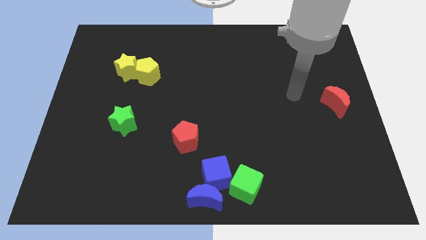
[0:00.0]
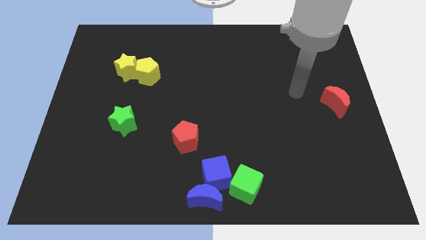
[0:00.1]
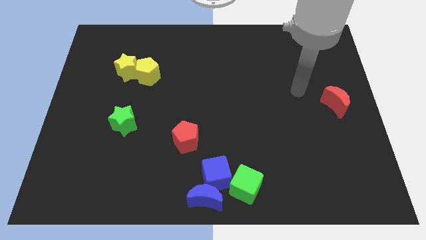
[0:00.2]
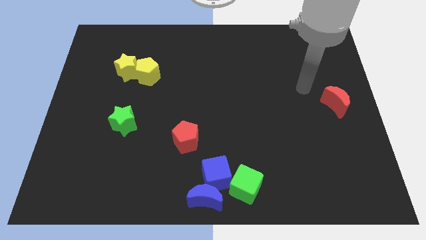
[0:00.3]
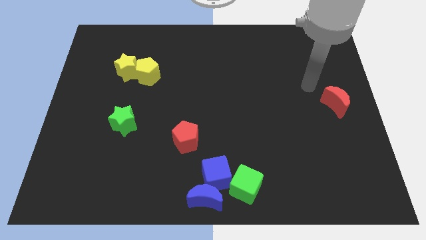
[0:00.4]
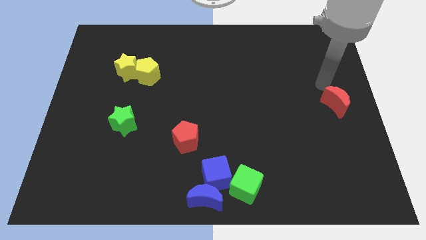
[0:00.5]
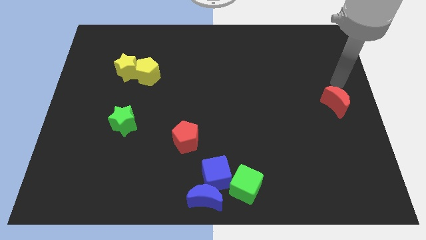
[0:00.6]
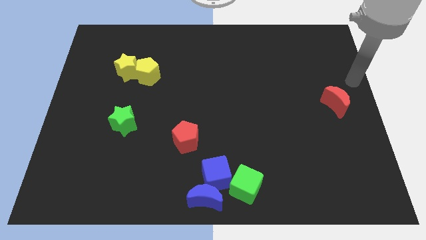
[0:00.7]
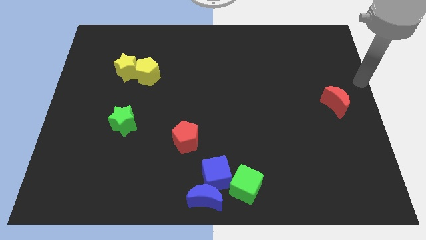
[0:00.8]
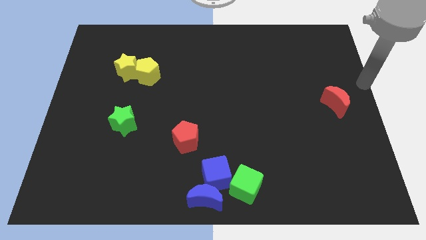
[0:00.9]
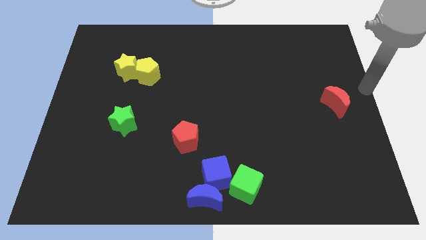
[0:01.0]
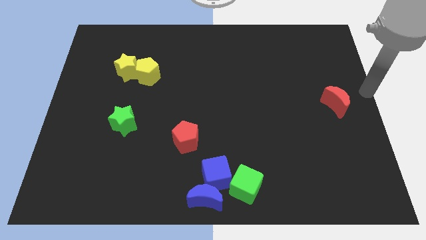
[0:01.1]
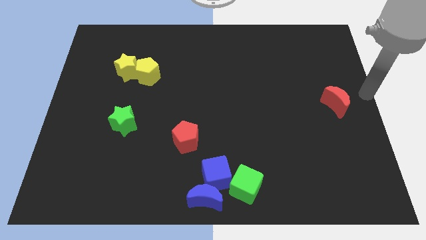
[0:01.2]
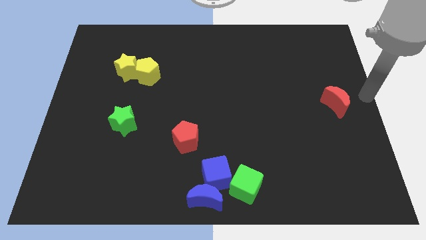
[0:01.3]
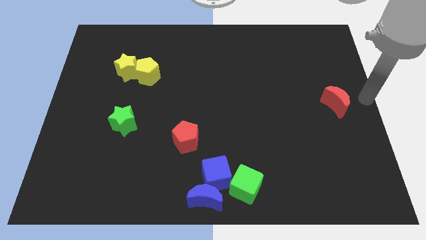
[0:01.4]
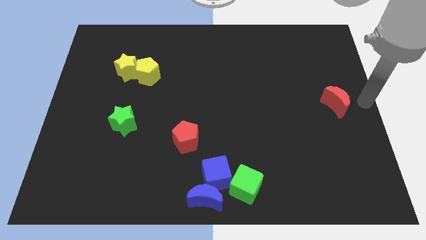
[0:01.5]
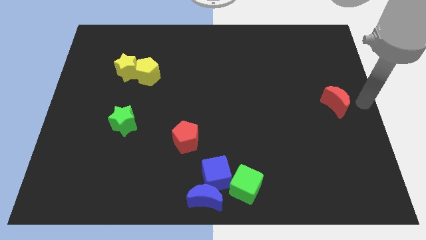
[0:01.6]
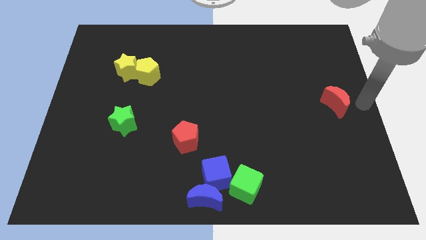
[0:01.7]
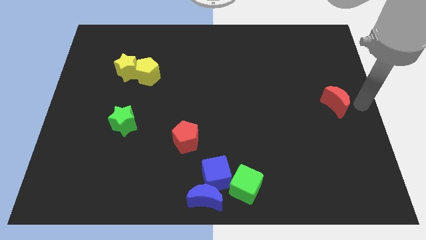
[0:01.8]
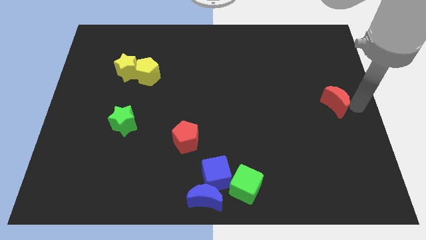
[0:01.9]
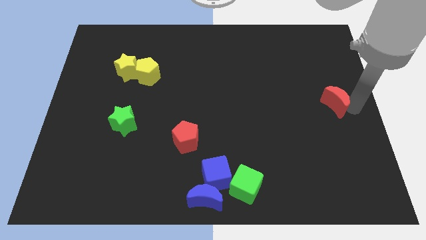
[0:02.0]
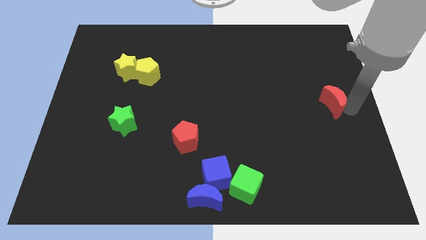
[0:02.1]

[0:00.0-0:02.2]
move your arm to the right side of the red crescent

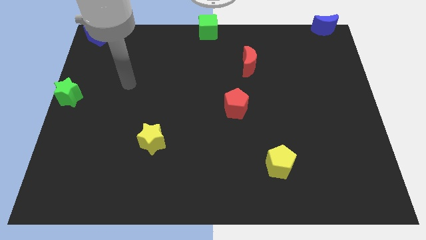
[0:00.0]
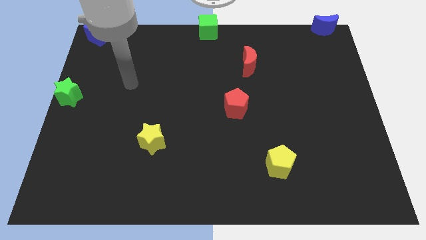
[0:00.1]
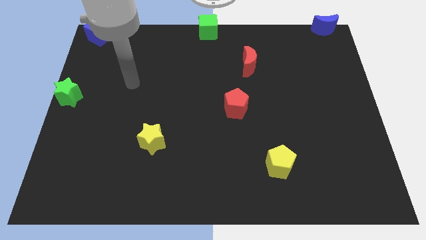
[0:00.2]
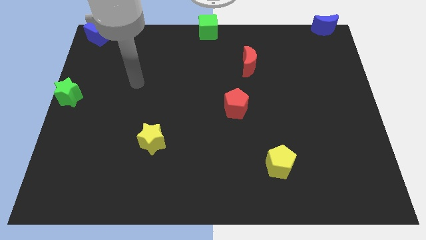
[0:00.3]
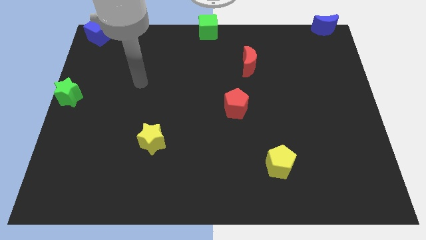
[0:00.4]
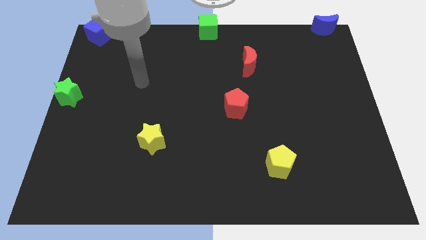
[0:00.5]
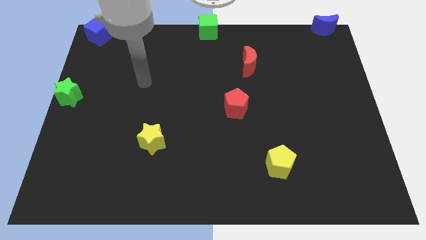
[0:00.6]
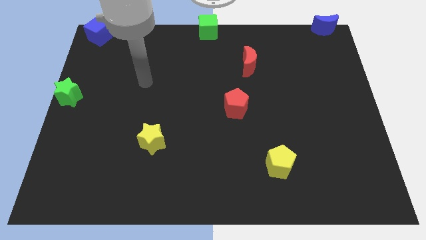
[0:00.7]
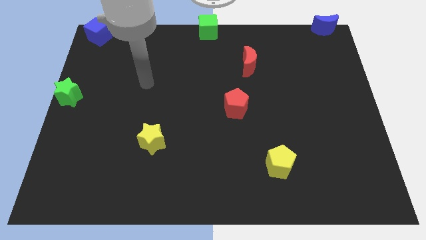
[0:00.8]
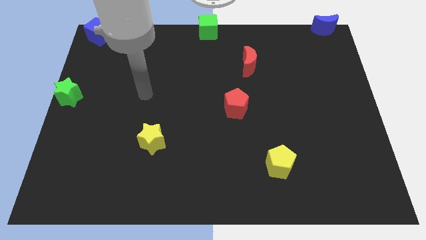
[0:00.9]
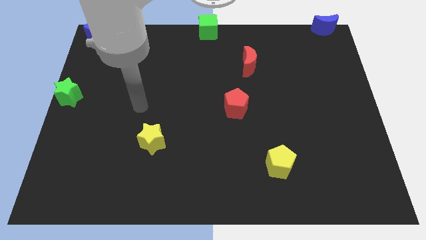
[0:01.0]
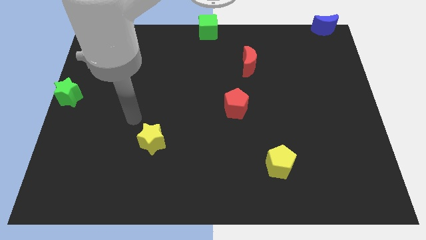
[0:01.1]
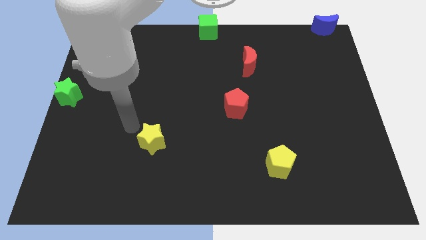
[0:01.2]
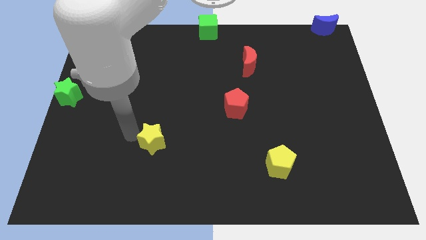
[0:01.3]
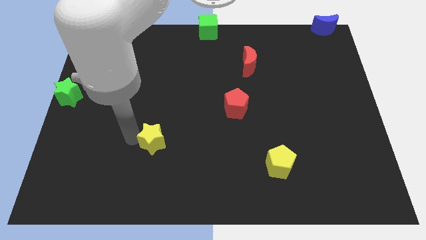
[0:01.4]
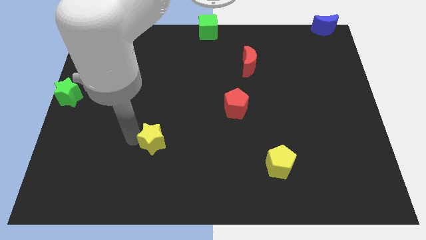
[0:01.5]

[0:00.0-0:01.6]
move your hand close to the yellow star

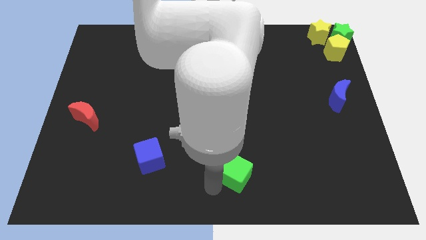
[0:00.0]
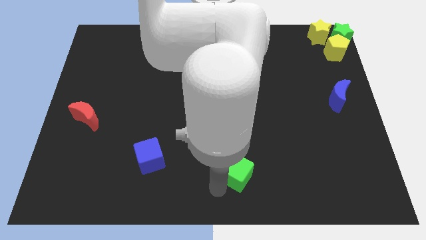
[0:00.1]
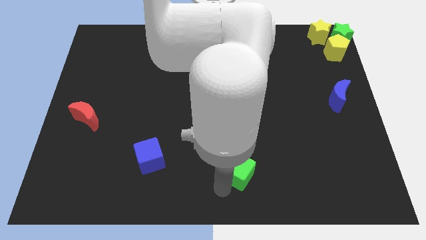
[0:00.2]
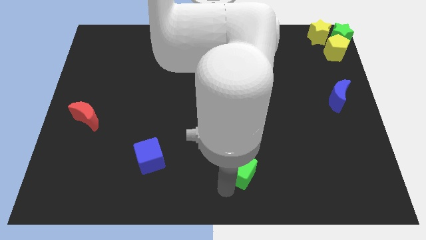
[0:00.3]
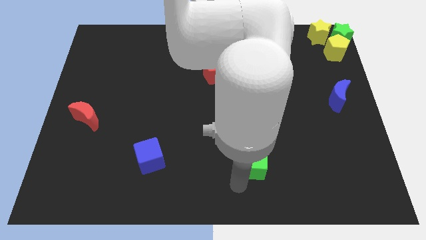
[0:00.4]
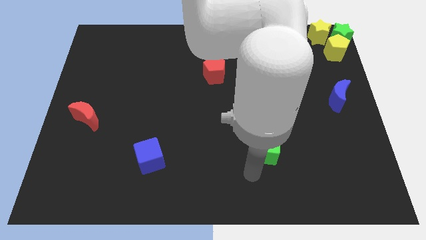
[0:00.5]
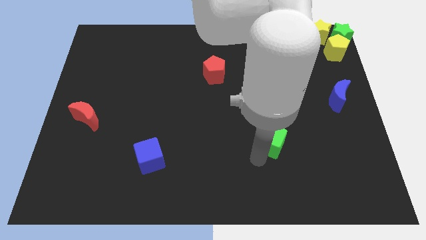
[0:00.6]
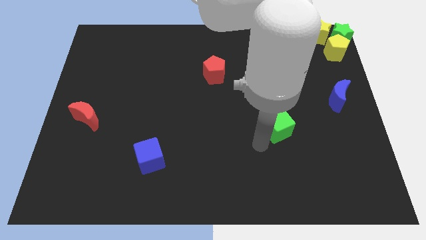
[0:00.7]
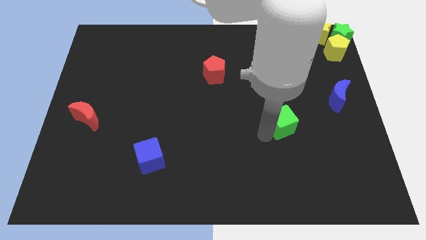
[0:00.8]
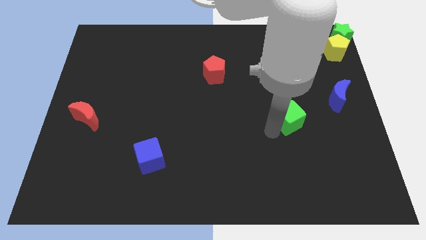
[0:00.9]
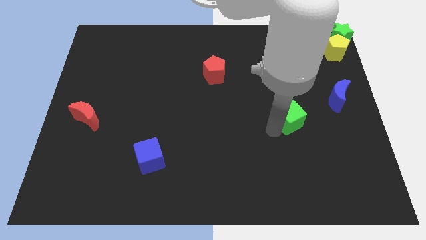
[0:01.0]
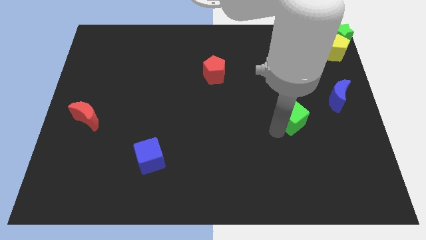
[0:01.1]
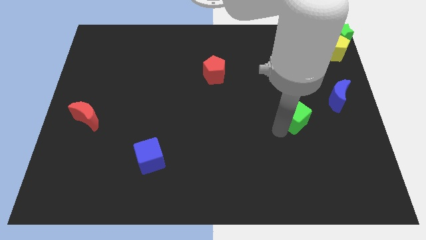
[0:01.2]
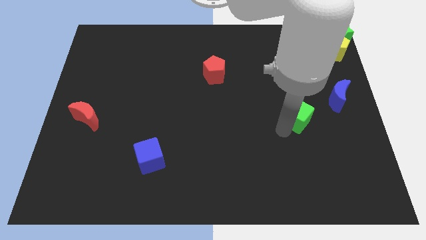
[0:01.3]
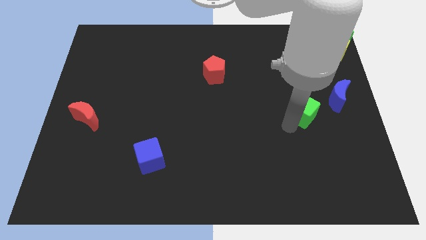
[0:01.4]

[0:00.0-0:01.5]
push the green cube slightly to the right side of the board

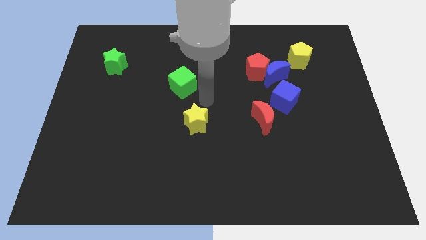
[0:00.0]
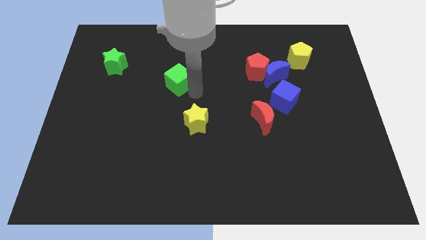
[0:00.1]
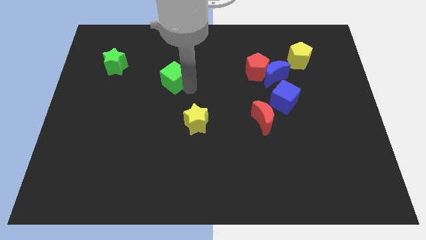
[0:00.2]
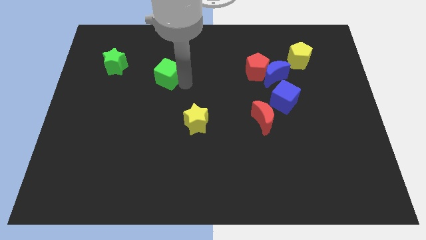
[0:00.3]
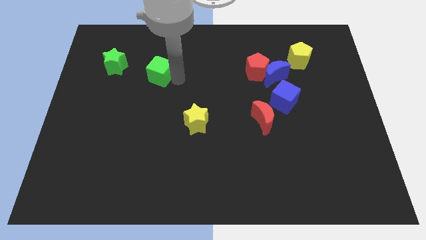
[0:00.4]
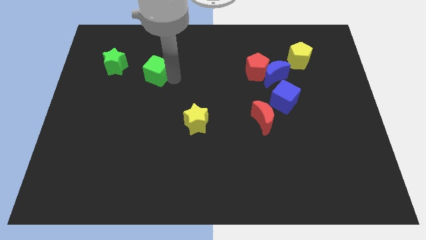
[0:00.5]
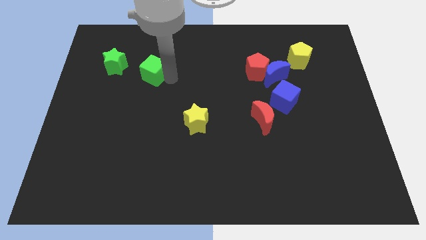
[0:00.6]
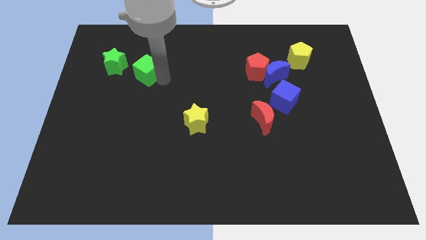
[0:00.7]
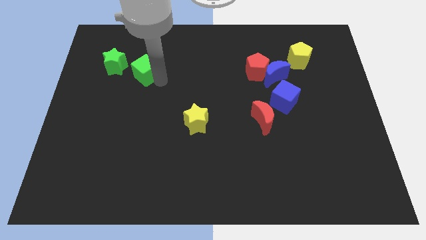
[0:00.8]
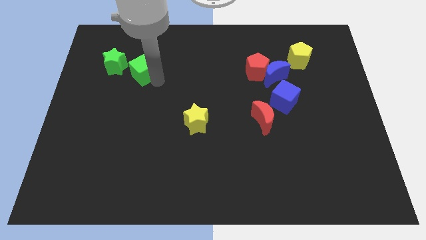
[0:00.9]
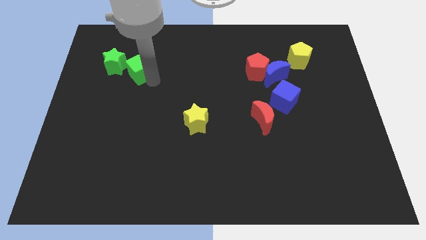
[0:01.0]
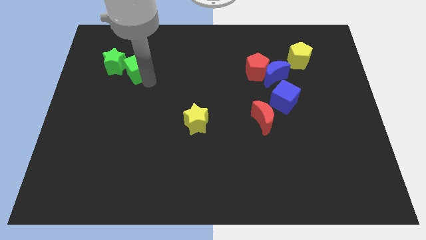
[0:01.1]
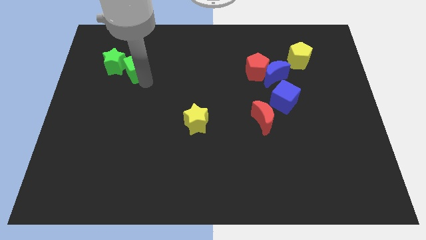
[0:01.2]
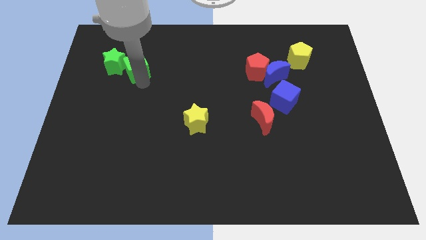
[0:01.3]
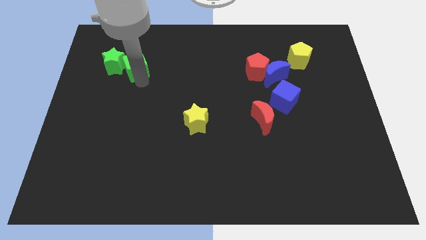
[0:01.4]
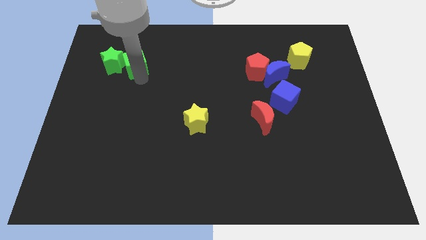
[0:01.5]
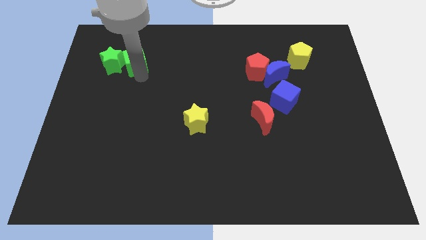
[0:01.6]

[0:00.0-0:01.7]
place the green cube to the right side of the green star

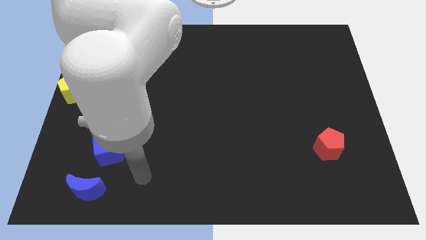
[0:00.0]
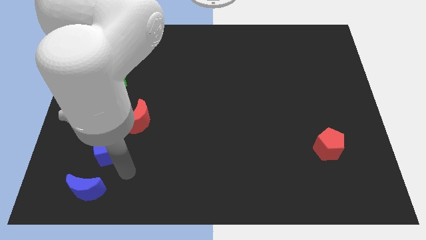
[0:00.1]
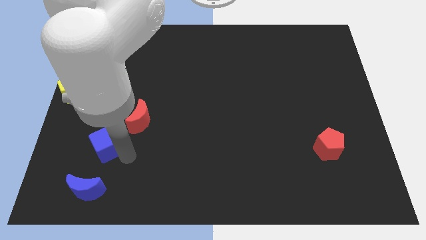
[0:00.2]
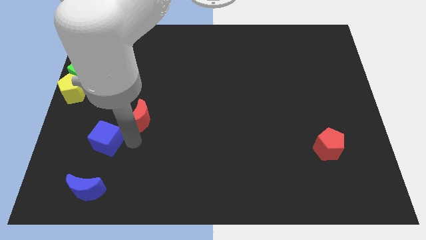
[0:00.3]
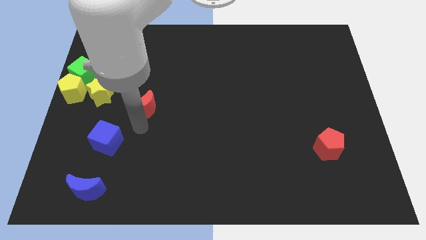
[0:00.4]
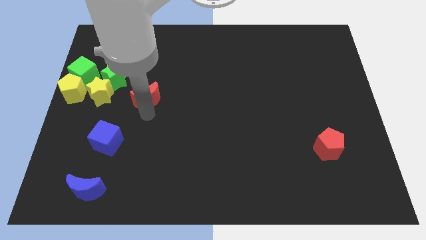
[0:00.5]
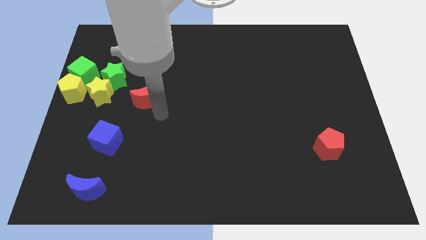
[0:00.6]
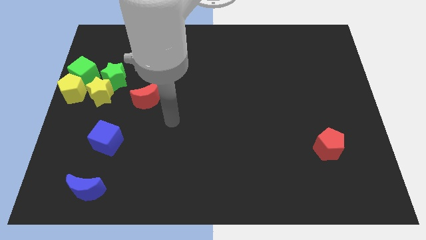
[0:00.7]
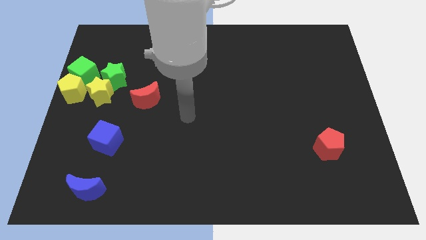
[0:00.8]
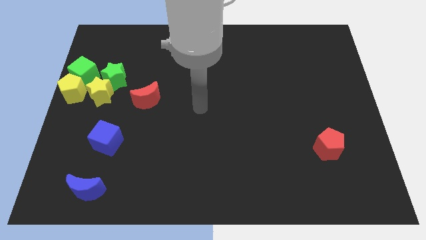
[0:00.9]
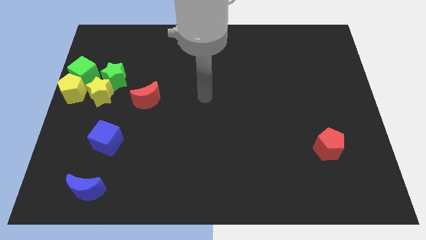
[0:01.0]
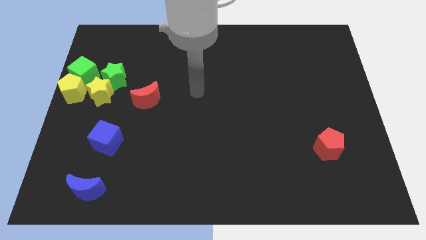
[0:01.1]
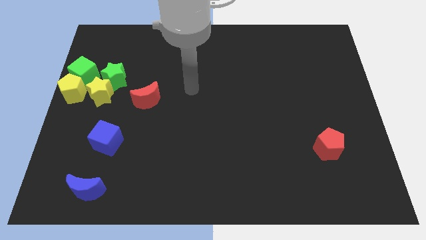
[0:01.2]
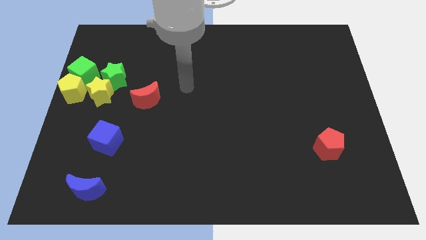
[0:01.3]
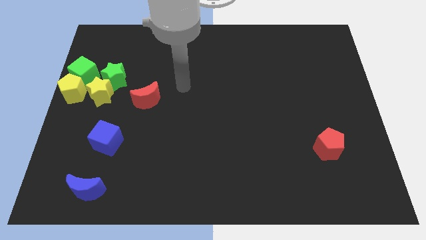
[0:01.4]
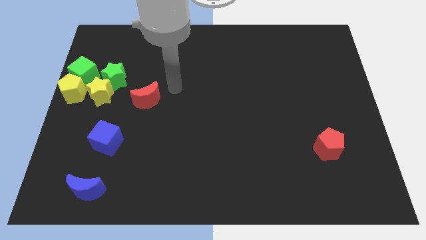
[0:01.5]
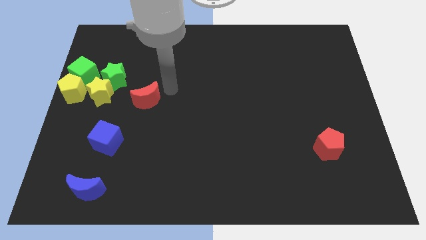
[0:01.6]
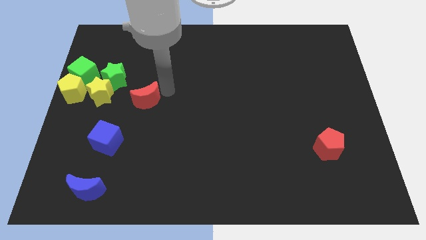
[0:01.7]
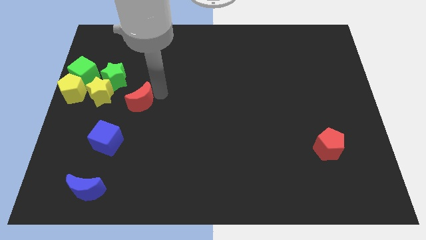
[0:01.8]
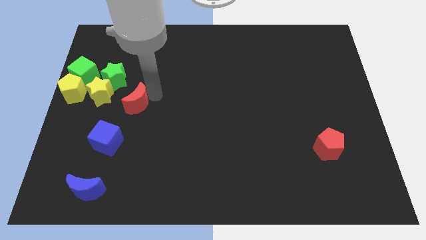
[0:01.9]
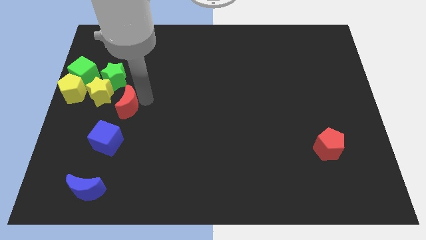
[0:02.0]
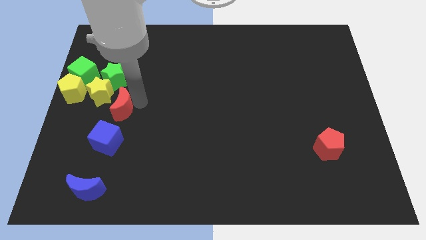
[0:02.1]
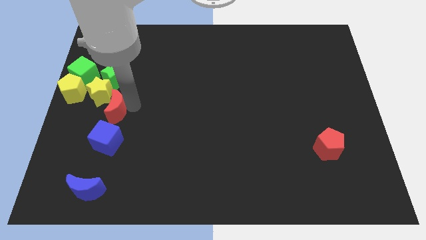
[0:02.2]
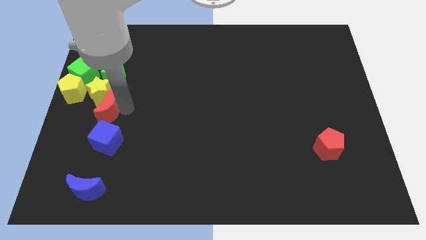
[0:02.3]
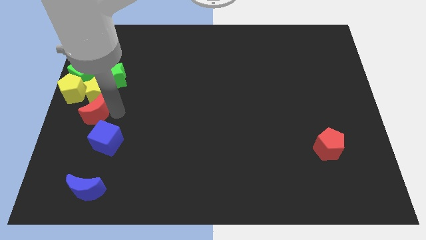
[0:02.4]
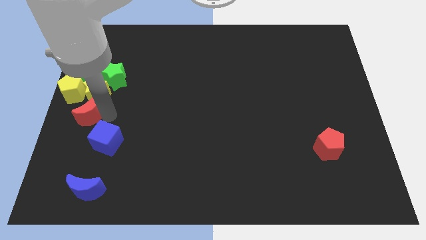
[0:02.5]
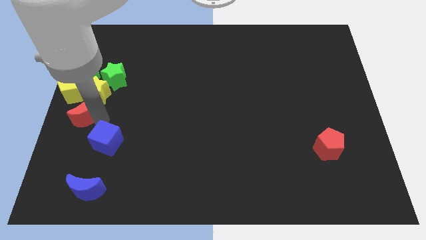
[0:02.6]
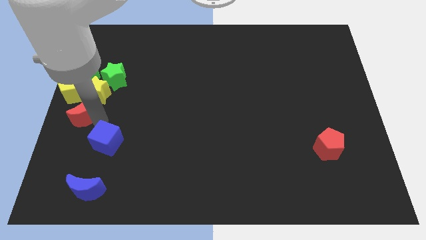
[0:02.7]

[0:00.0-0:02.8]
separate the red moon towards the yellow star at the bottom
